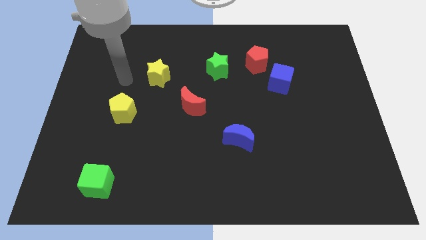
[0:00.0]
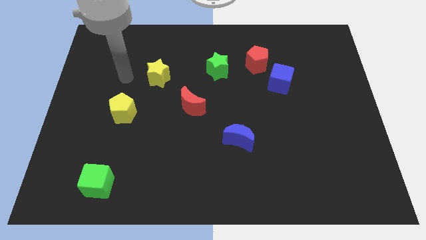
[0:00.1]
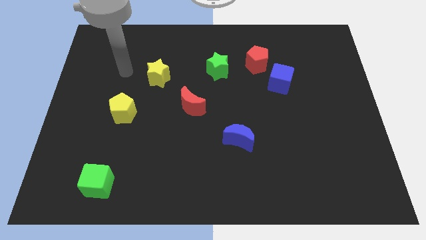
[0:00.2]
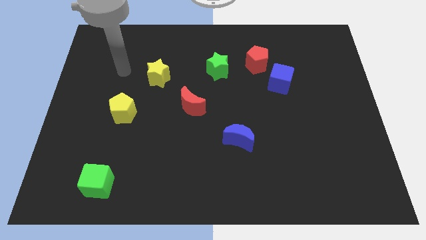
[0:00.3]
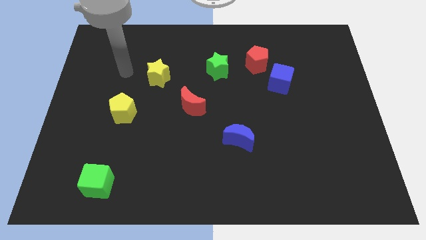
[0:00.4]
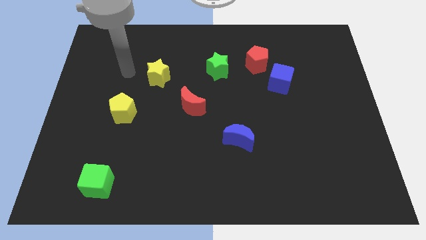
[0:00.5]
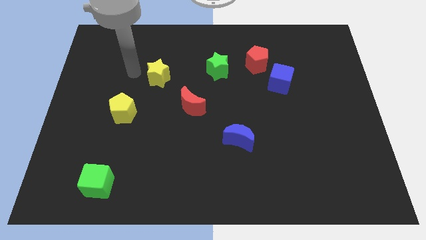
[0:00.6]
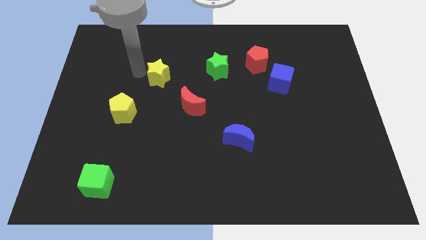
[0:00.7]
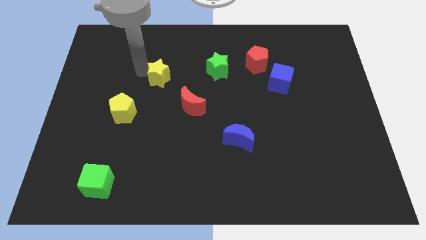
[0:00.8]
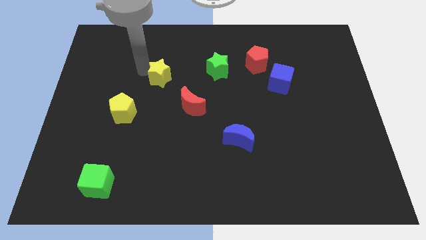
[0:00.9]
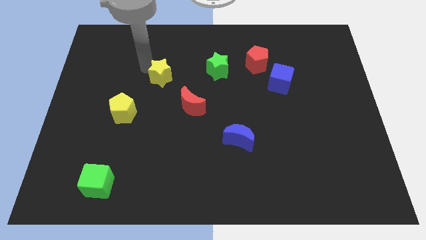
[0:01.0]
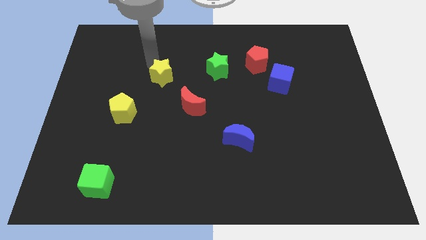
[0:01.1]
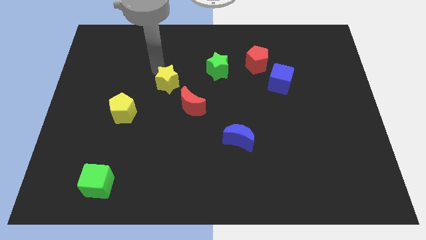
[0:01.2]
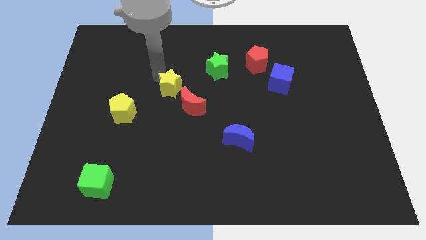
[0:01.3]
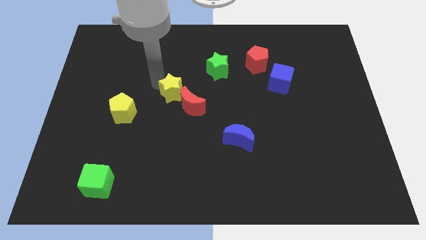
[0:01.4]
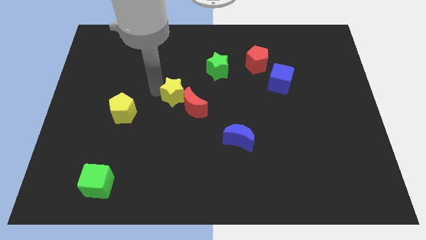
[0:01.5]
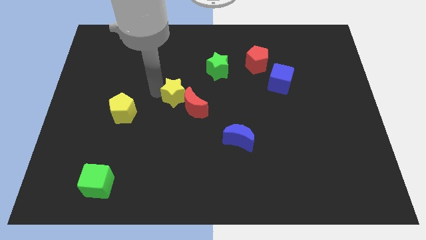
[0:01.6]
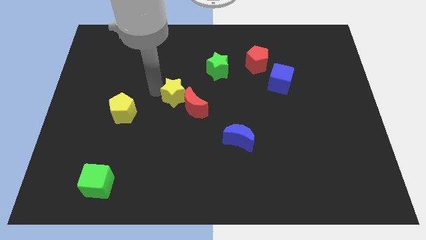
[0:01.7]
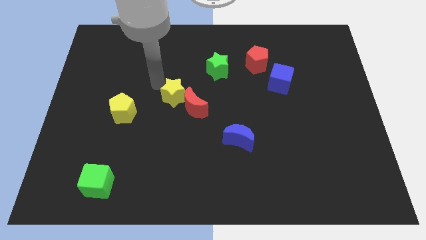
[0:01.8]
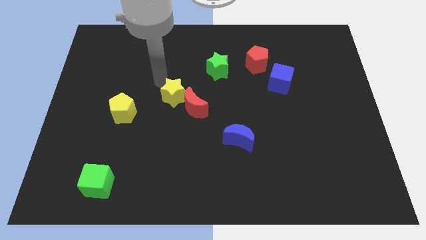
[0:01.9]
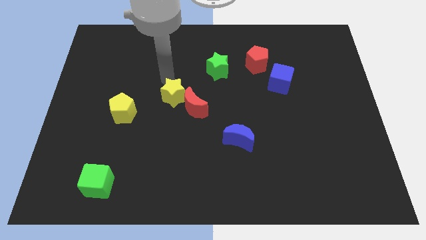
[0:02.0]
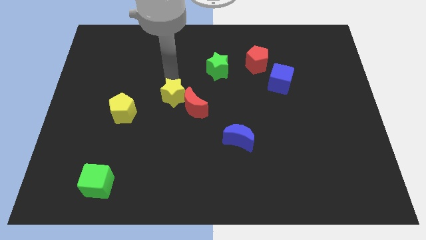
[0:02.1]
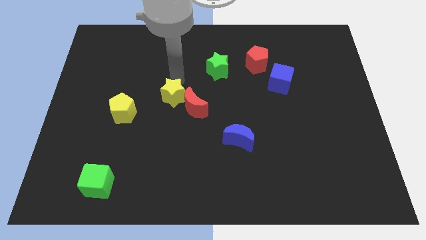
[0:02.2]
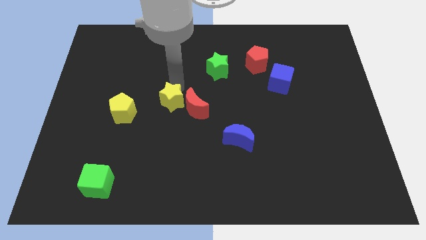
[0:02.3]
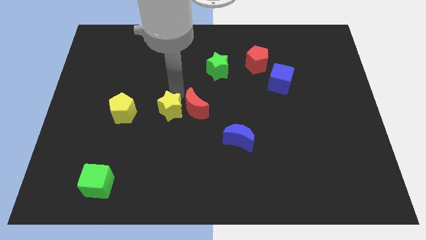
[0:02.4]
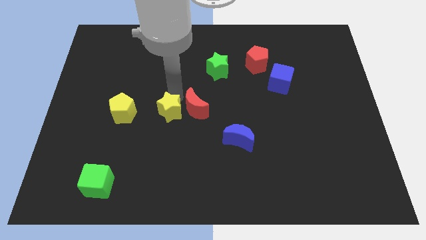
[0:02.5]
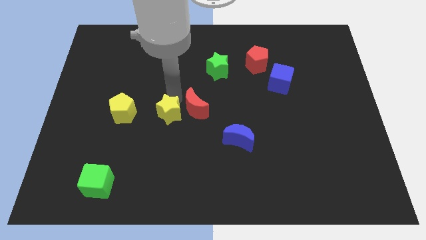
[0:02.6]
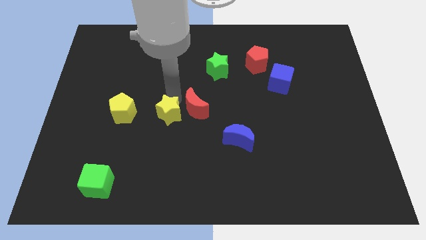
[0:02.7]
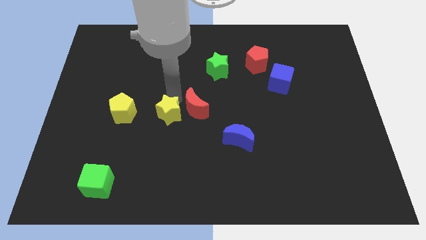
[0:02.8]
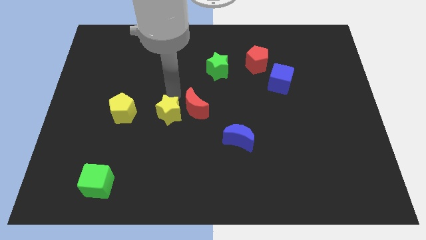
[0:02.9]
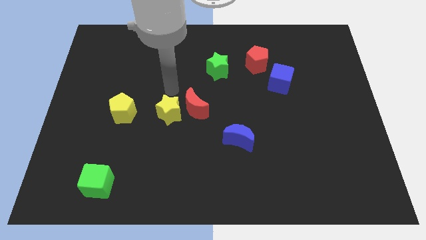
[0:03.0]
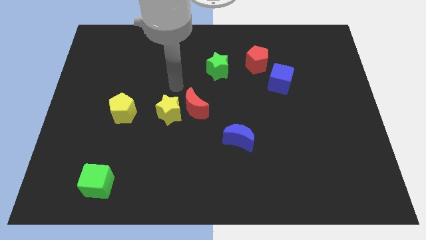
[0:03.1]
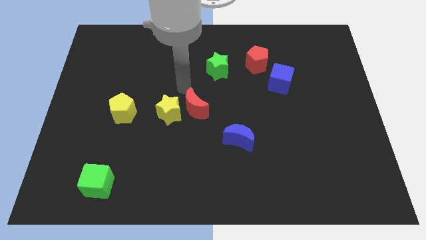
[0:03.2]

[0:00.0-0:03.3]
put the yellow star on the left side of the red crescent

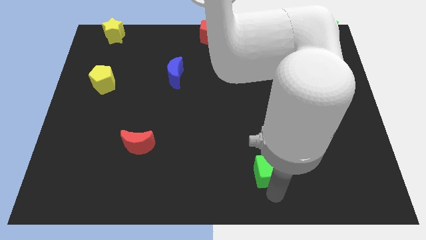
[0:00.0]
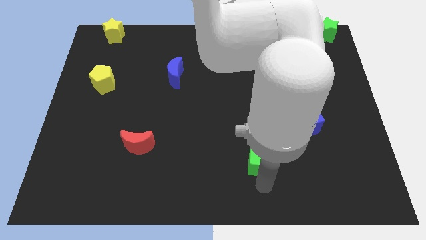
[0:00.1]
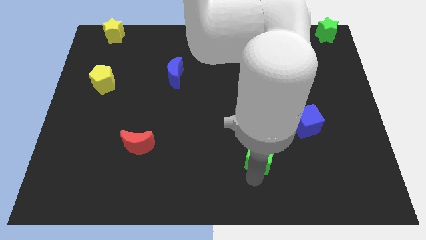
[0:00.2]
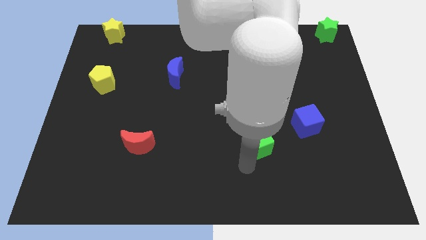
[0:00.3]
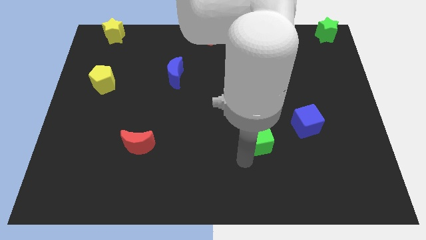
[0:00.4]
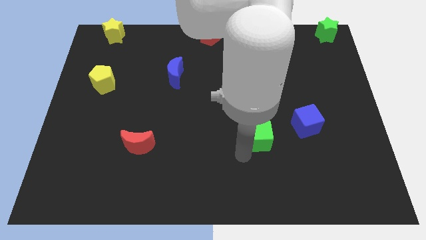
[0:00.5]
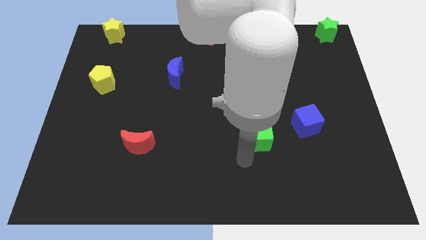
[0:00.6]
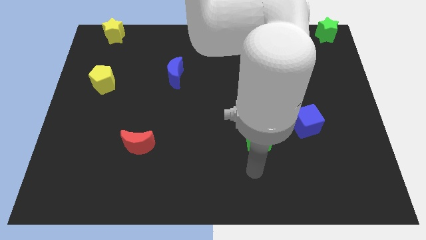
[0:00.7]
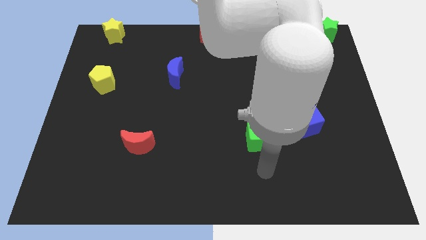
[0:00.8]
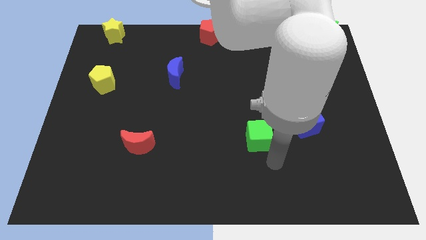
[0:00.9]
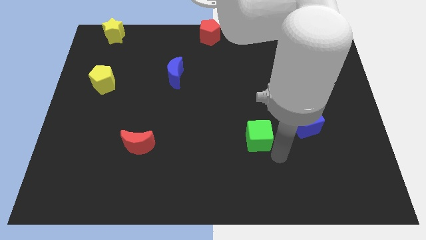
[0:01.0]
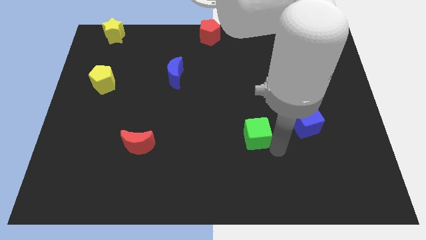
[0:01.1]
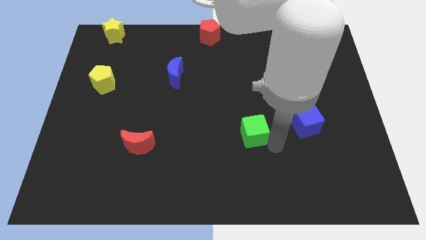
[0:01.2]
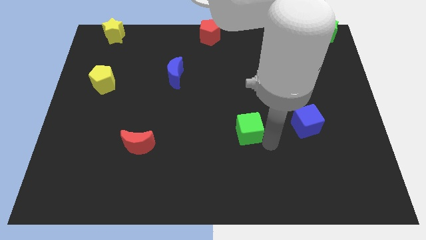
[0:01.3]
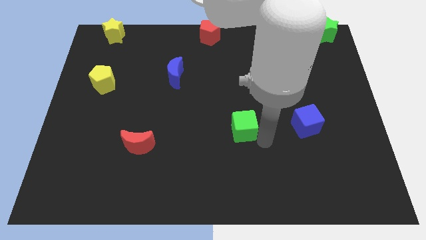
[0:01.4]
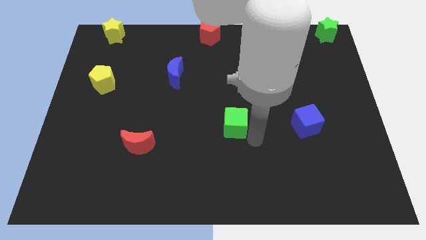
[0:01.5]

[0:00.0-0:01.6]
drag the green cube slightly upwards

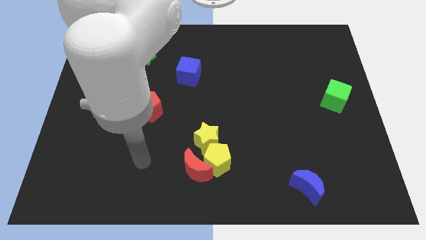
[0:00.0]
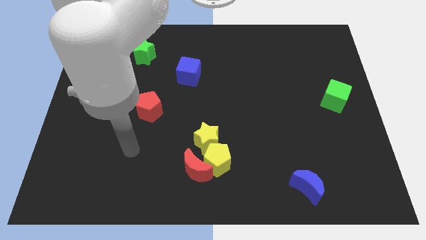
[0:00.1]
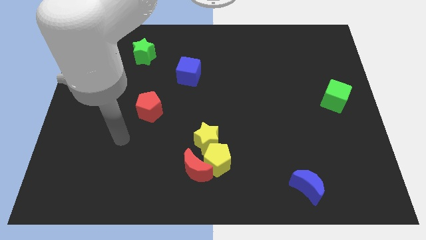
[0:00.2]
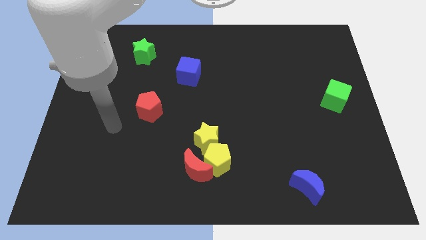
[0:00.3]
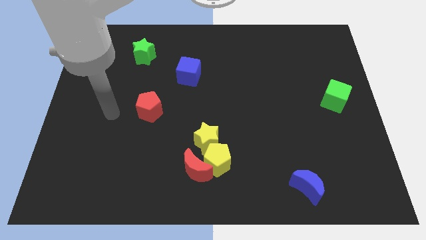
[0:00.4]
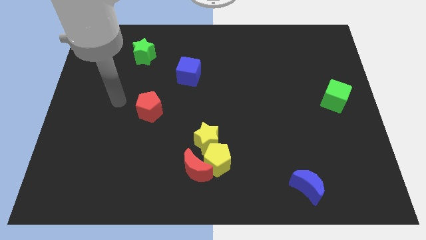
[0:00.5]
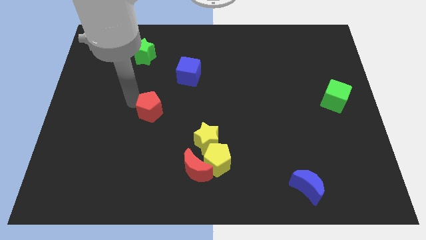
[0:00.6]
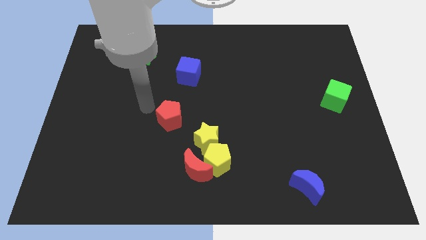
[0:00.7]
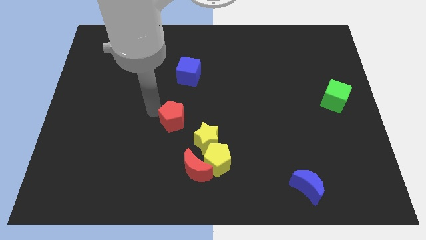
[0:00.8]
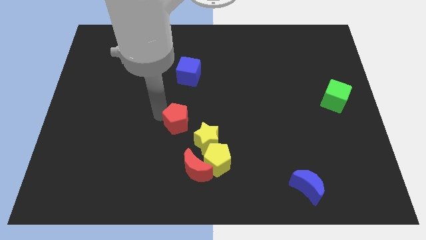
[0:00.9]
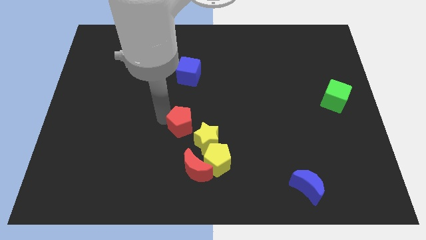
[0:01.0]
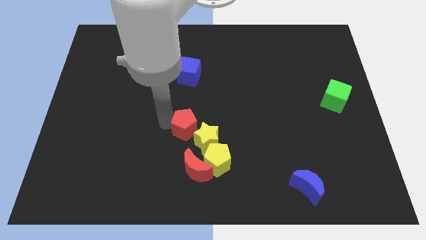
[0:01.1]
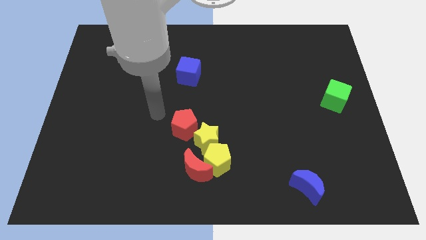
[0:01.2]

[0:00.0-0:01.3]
move the red pentagon to the top left of the yellow star

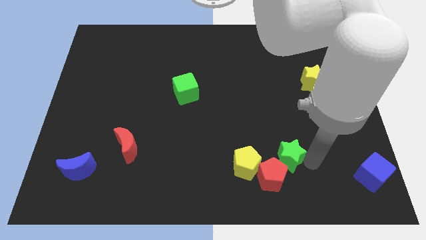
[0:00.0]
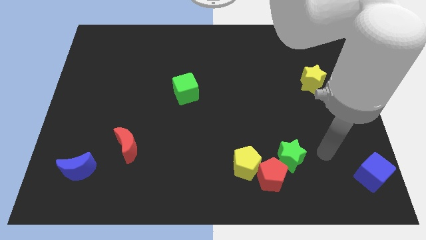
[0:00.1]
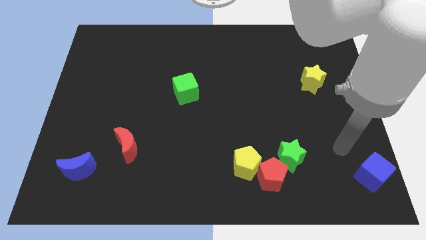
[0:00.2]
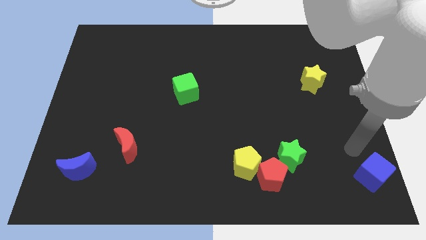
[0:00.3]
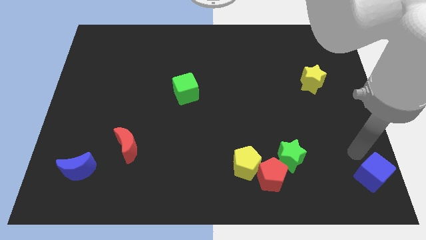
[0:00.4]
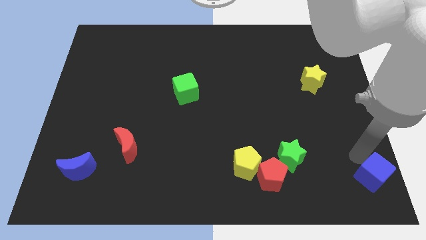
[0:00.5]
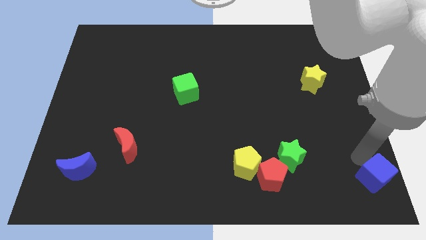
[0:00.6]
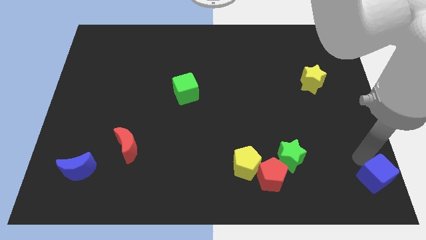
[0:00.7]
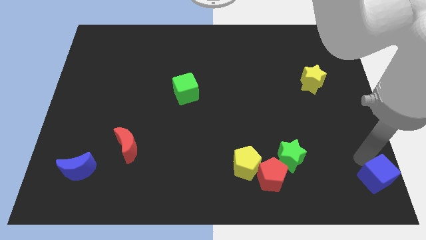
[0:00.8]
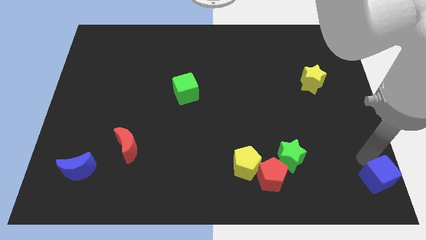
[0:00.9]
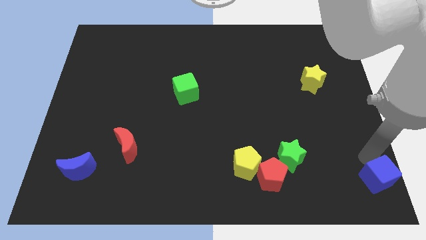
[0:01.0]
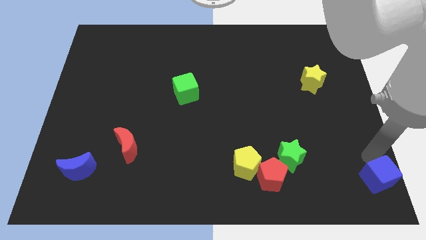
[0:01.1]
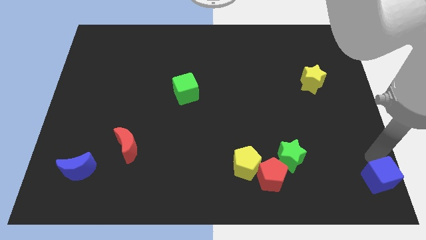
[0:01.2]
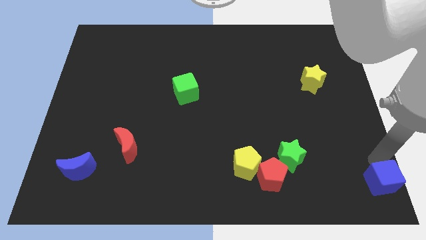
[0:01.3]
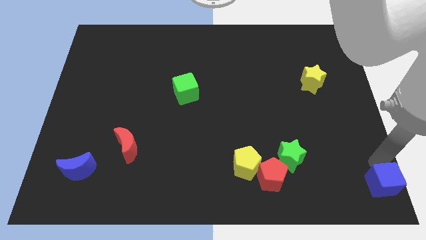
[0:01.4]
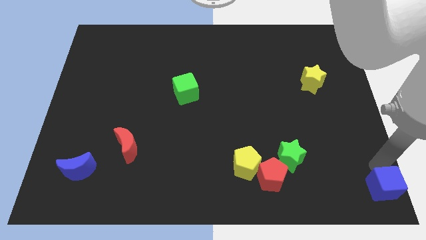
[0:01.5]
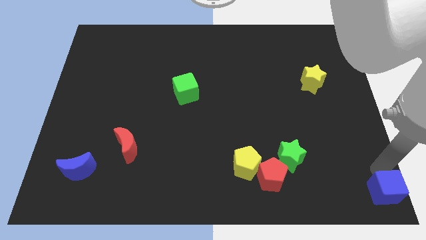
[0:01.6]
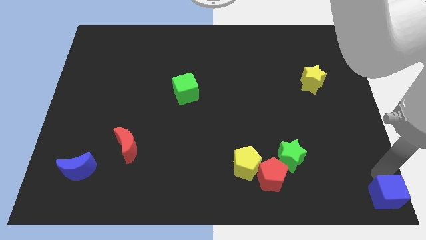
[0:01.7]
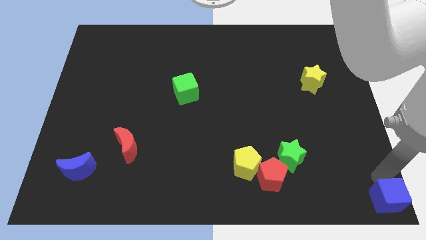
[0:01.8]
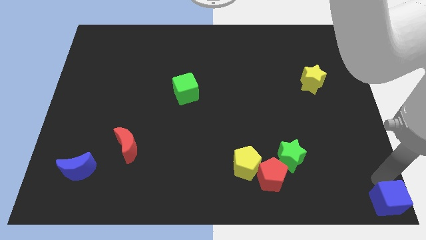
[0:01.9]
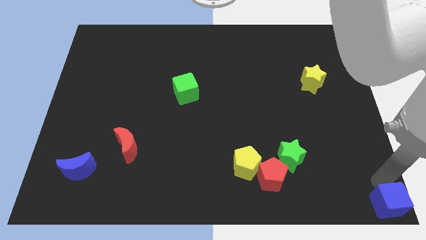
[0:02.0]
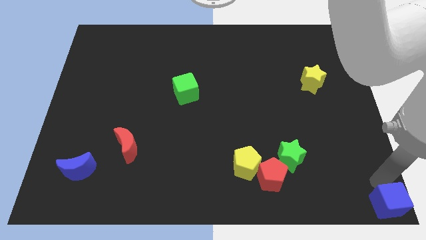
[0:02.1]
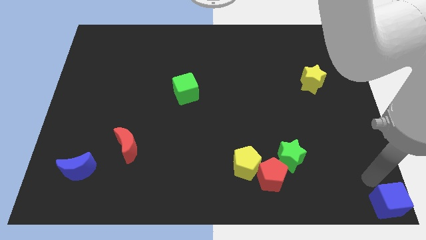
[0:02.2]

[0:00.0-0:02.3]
push the blue cube to the bottom right corner of the board

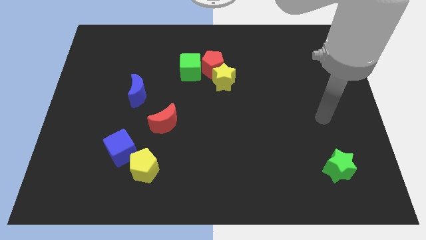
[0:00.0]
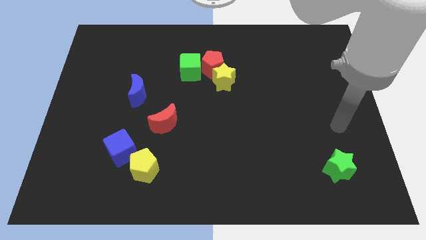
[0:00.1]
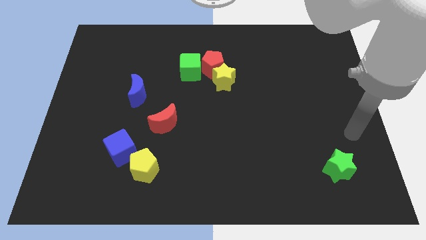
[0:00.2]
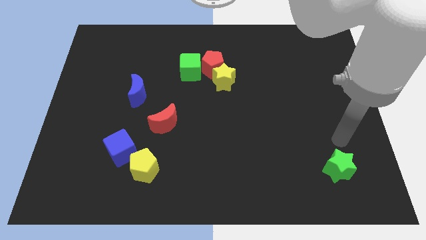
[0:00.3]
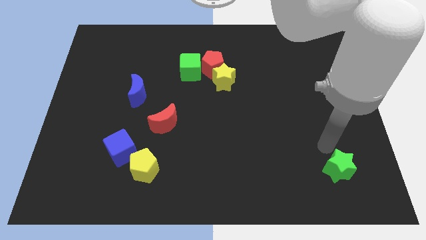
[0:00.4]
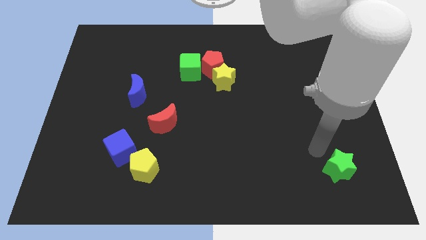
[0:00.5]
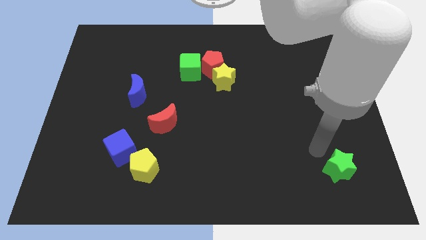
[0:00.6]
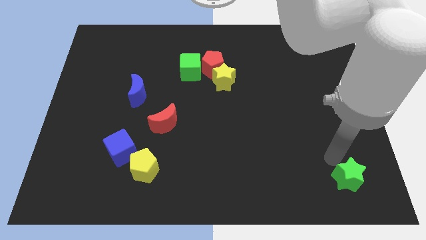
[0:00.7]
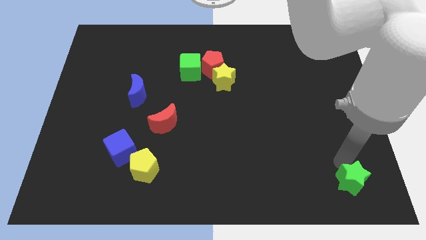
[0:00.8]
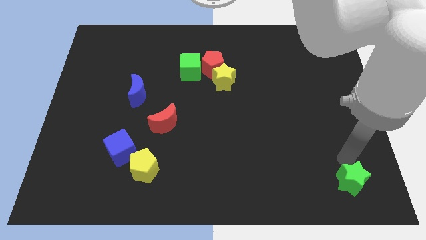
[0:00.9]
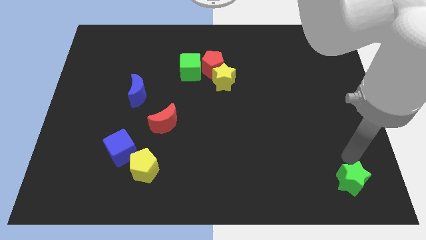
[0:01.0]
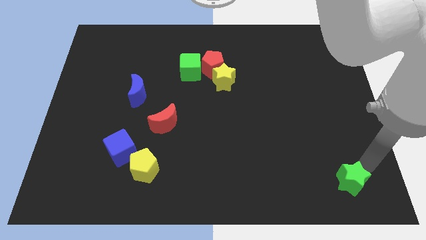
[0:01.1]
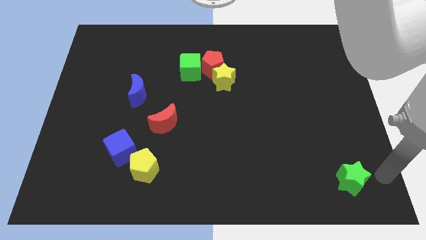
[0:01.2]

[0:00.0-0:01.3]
place the green star towards the bottom right of the board
